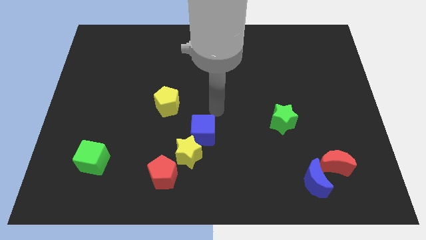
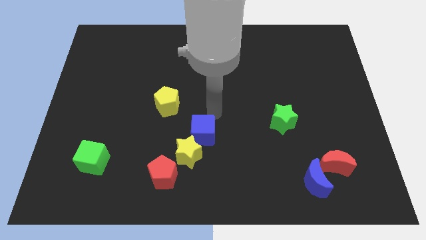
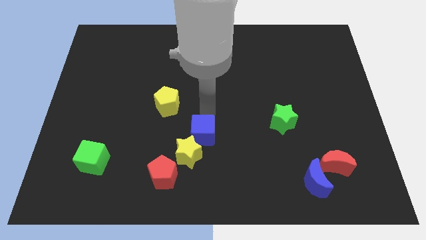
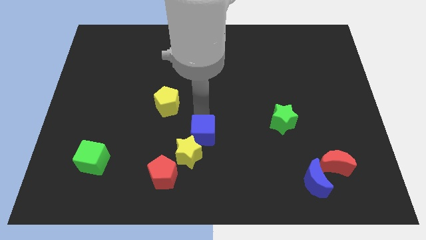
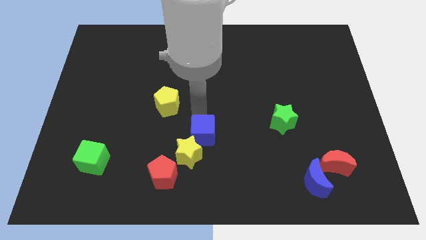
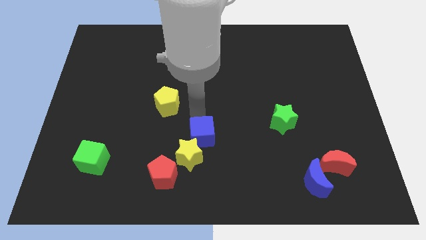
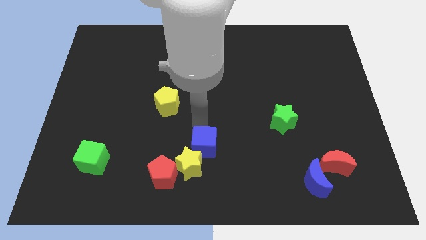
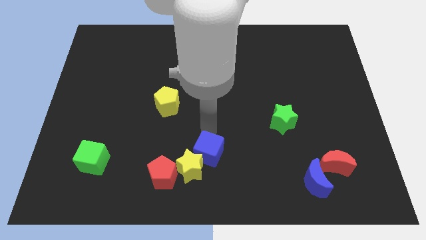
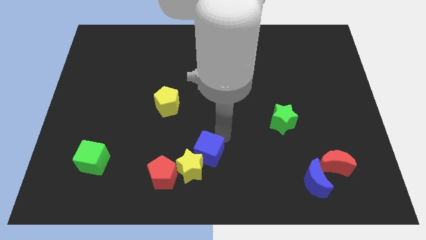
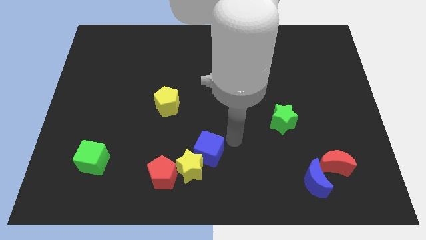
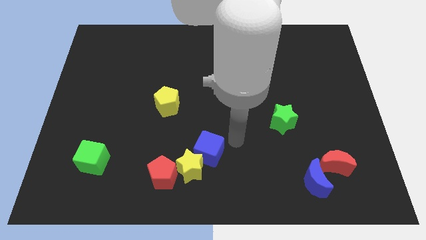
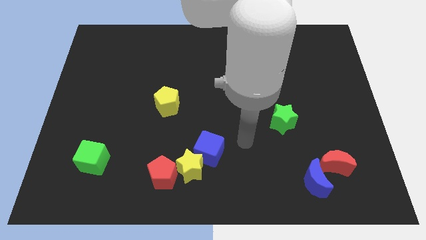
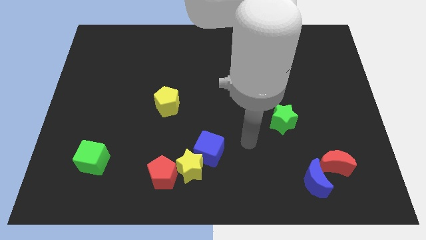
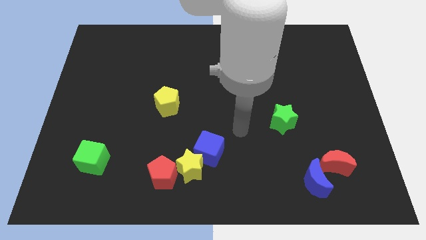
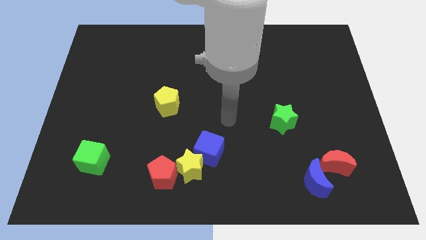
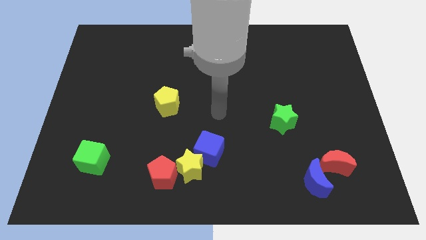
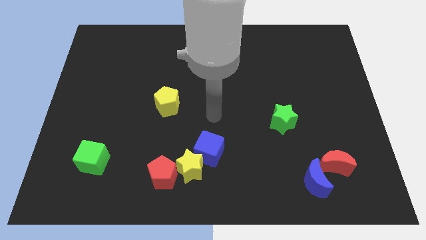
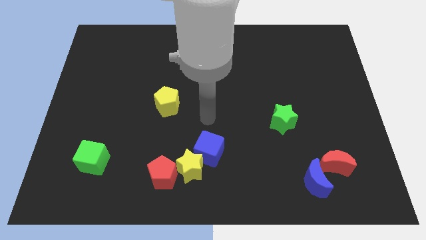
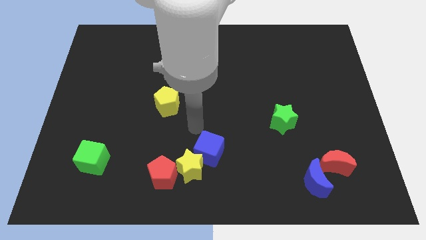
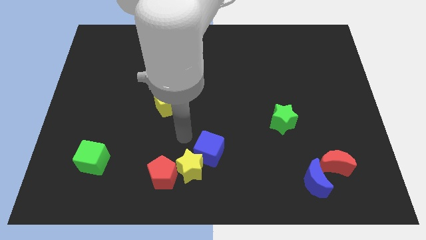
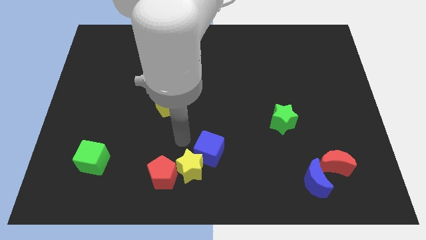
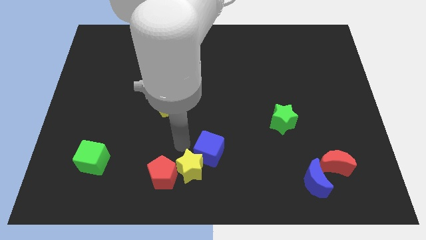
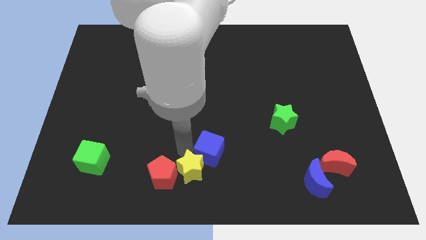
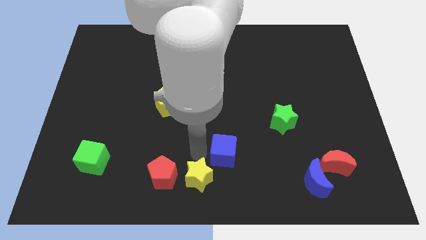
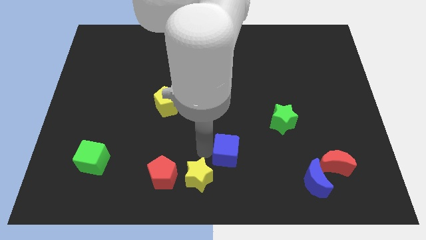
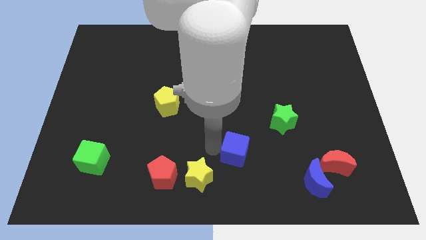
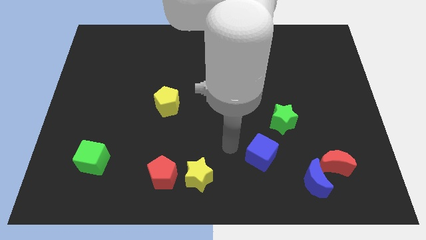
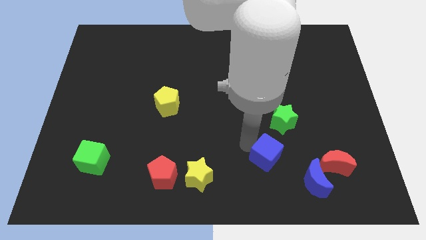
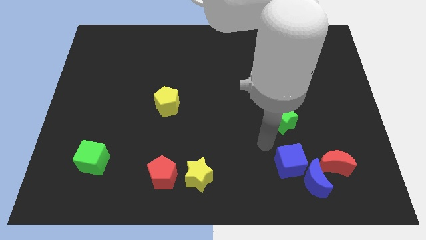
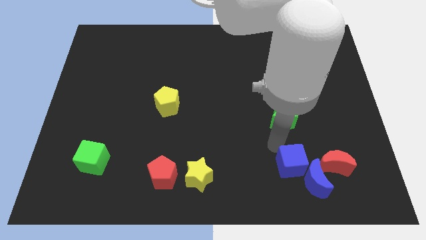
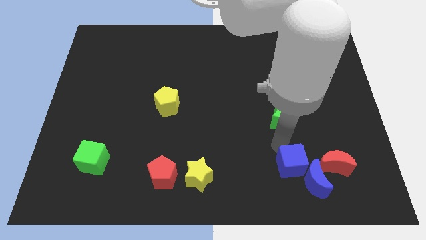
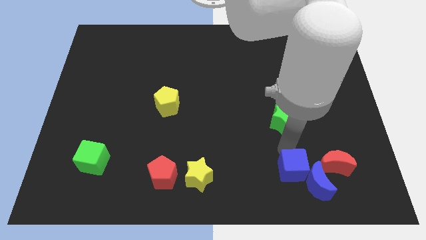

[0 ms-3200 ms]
move the blue clube into the blue crescent

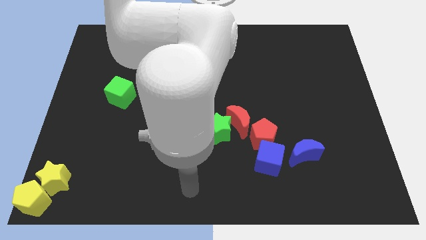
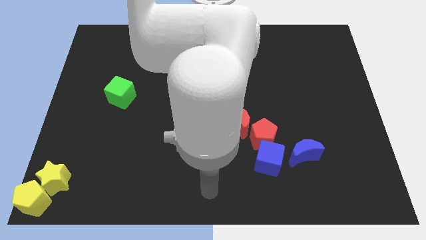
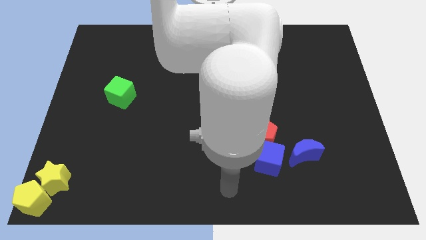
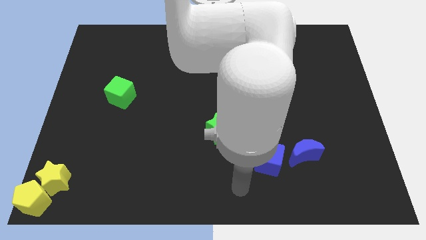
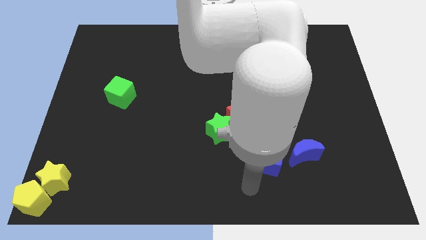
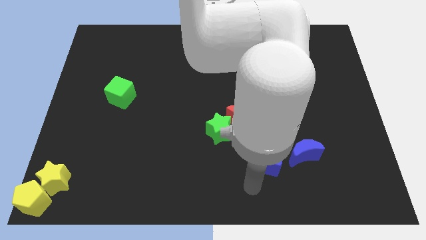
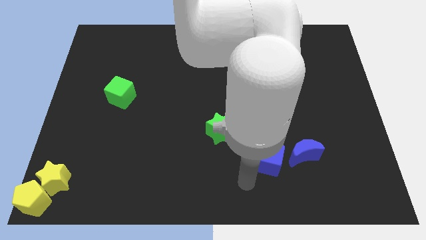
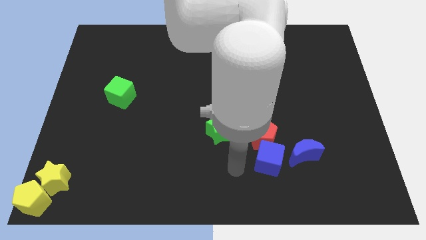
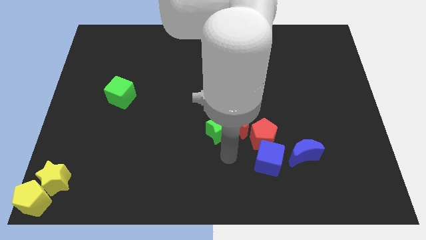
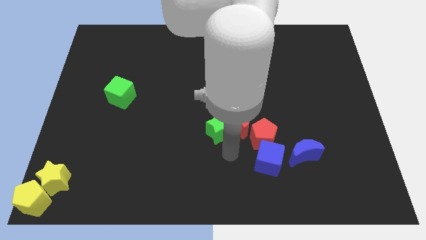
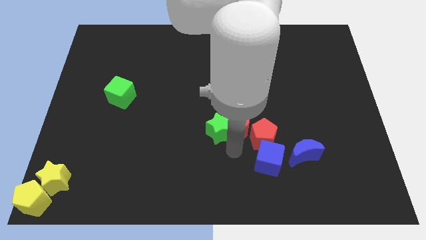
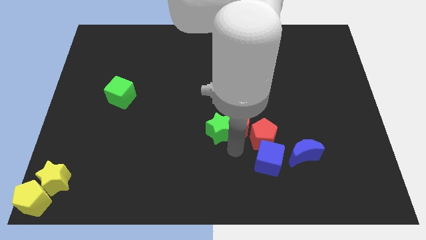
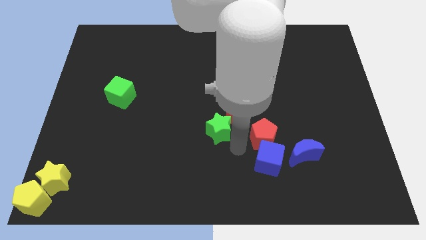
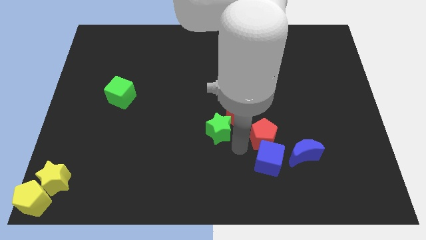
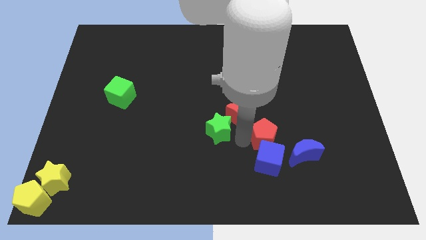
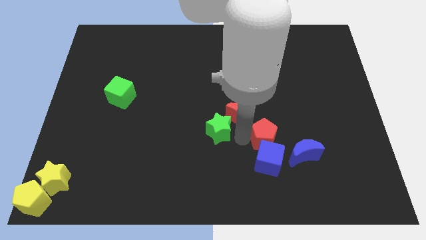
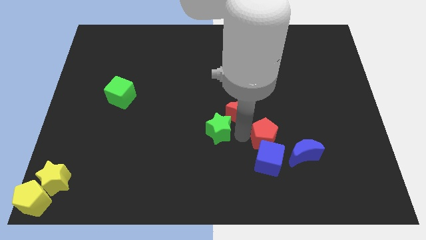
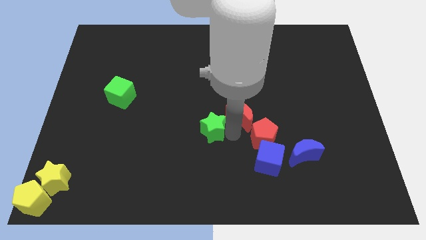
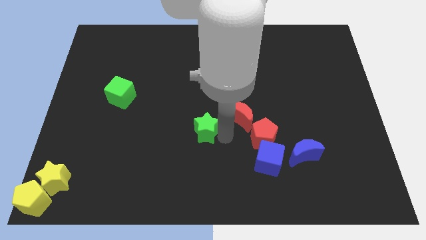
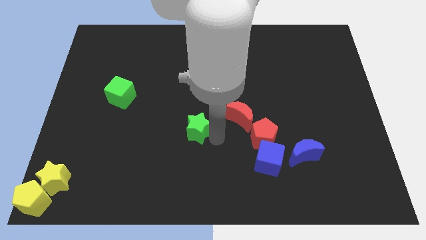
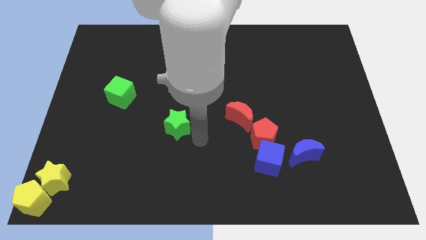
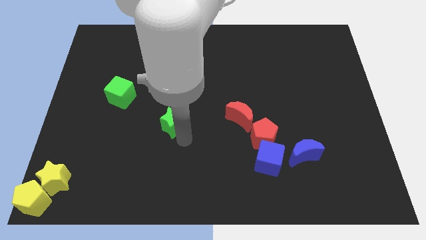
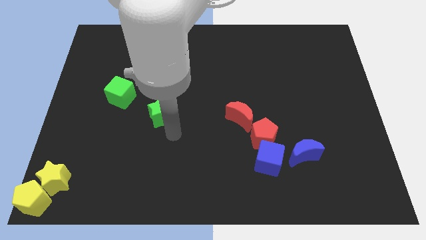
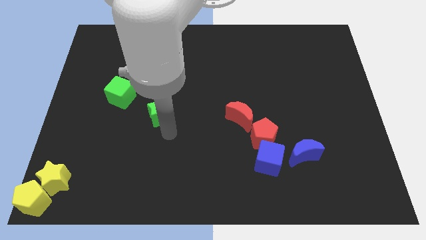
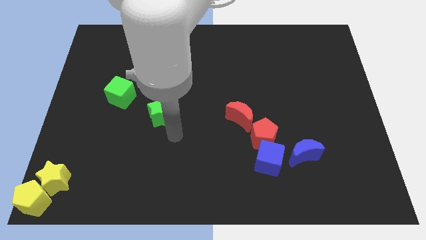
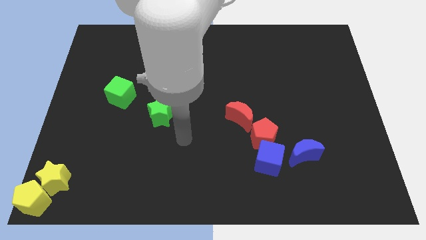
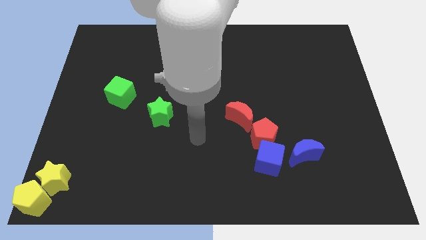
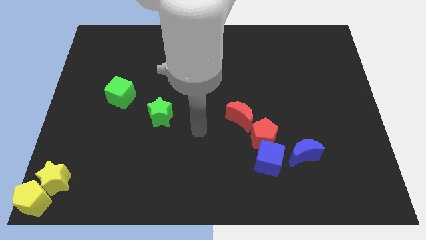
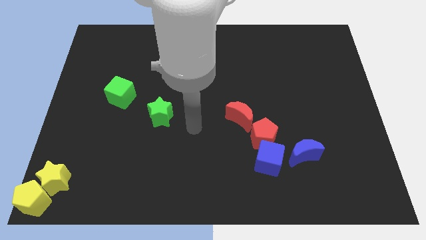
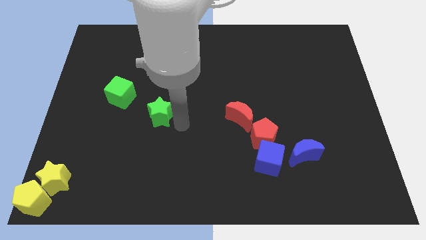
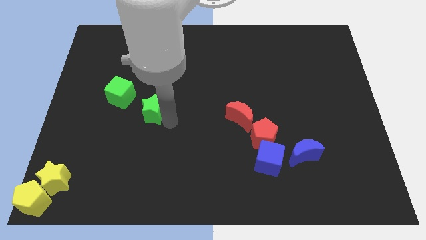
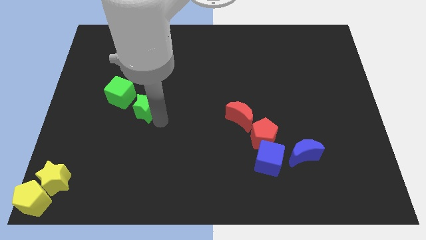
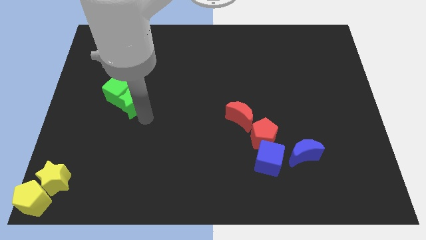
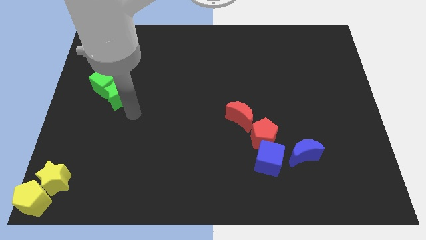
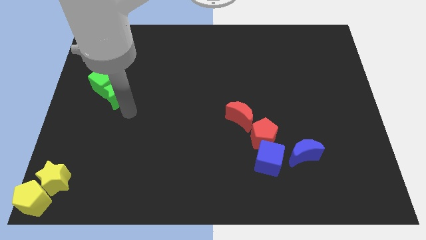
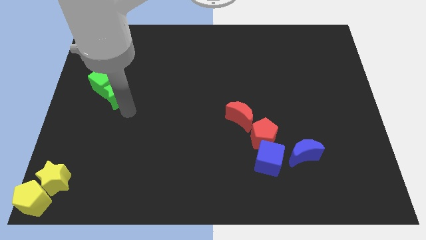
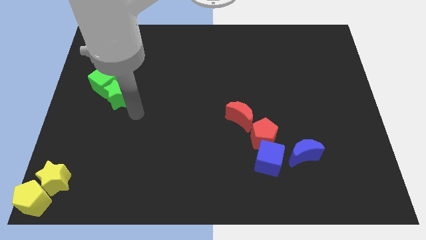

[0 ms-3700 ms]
push the green star into the green cube

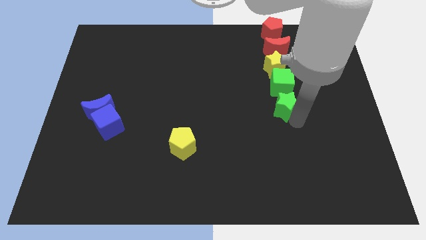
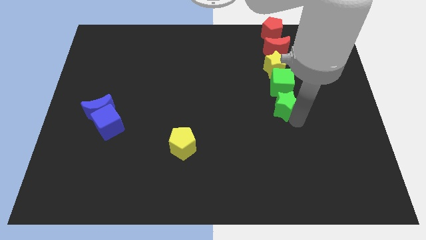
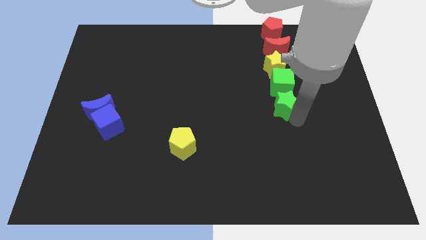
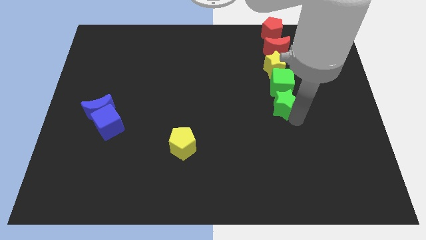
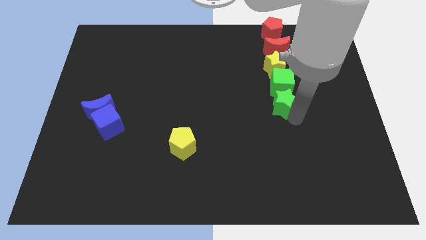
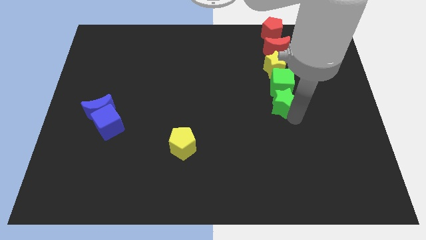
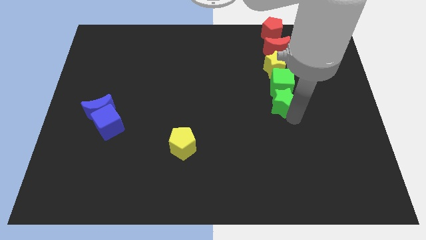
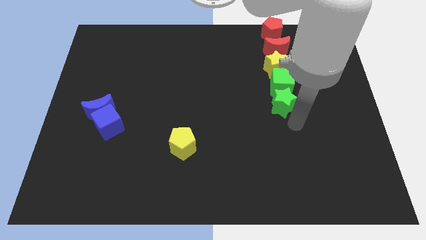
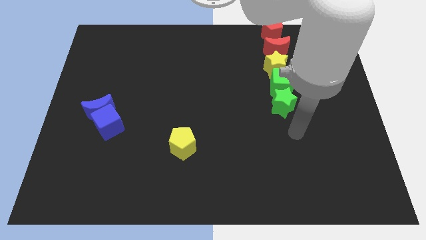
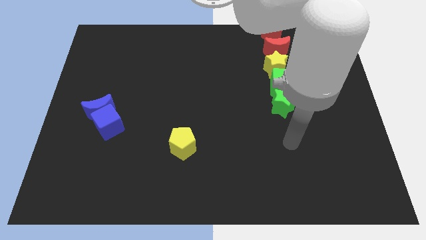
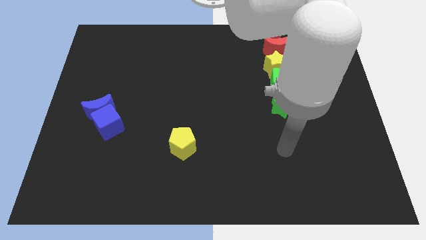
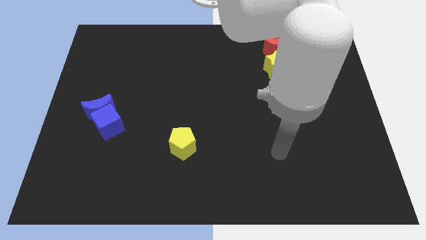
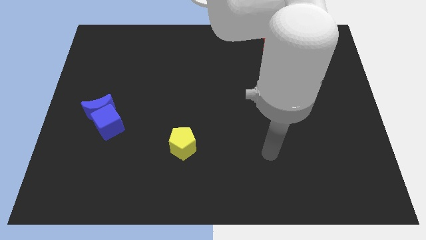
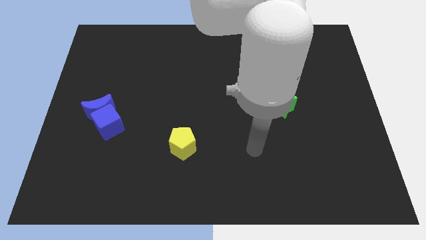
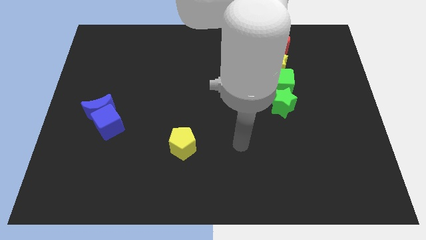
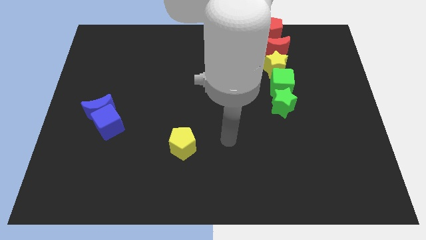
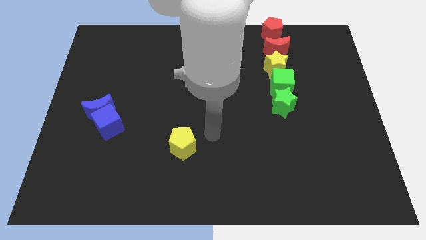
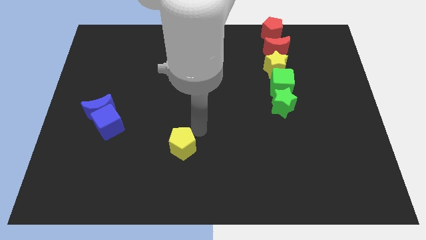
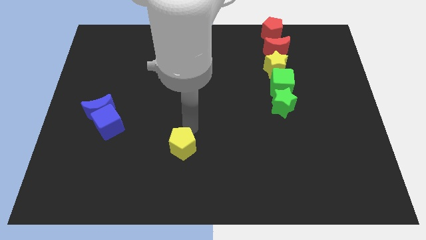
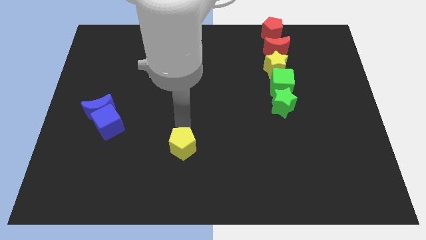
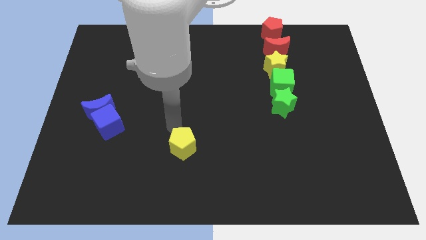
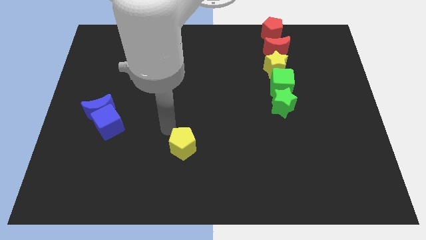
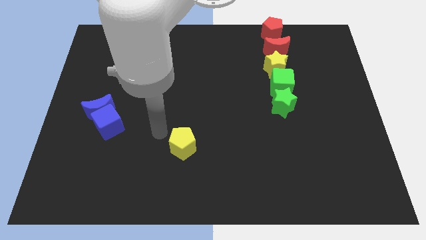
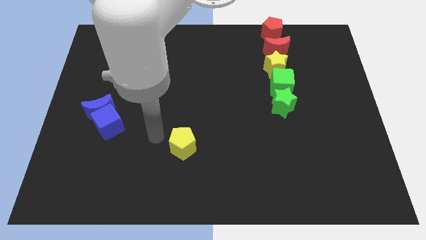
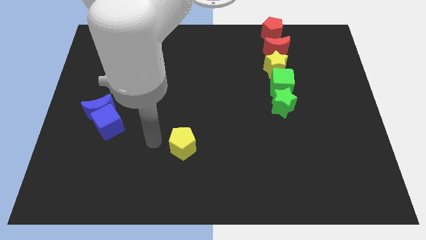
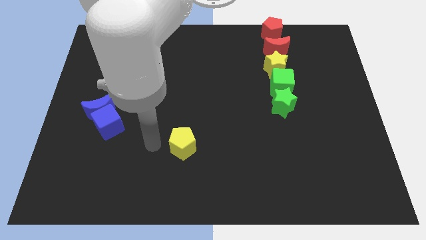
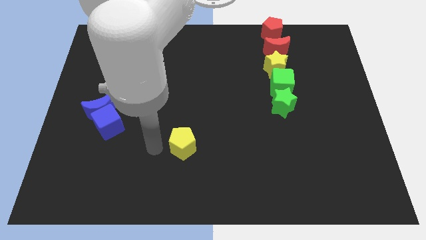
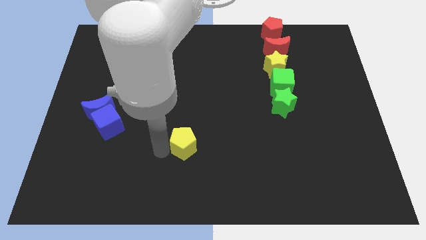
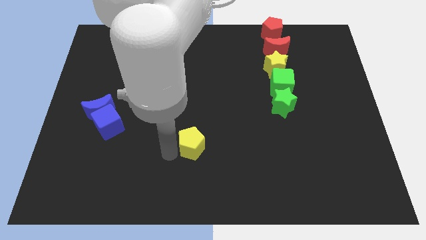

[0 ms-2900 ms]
move your arm away from green star
